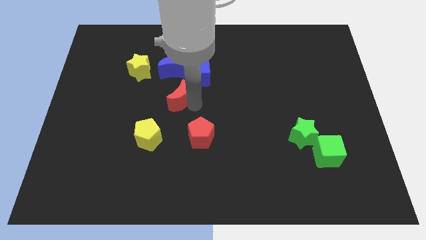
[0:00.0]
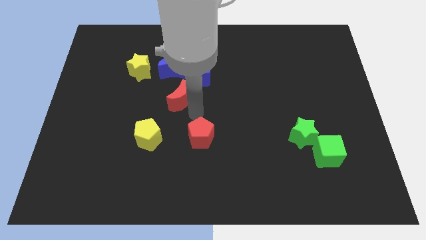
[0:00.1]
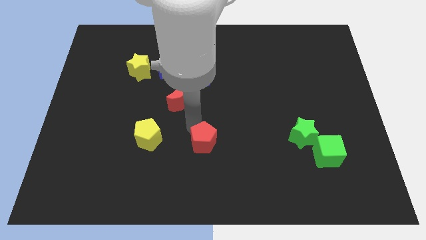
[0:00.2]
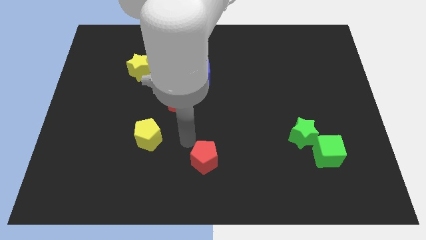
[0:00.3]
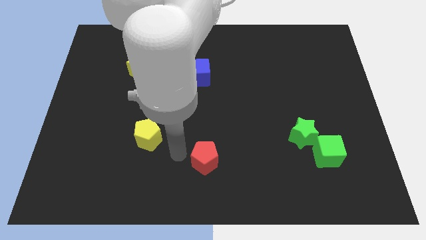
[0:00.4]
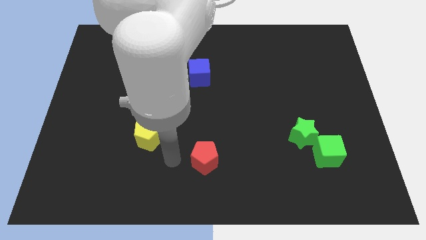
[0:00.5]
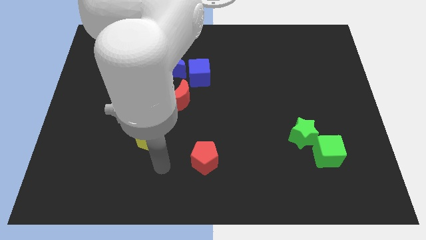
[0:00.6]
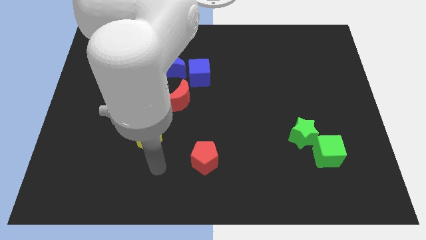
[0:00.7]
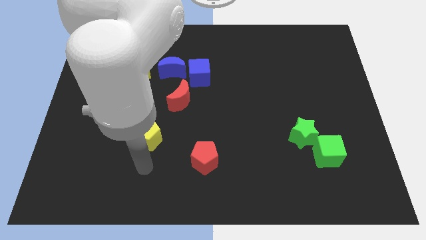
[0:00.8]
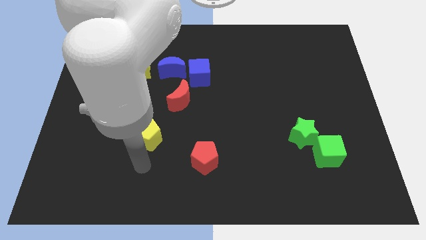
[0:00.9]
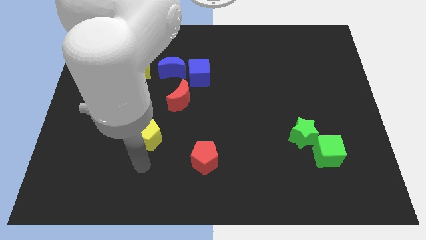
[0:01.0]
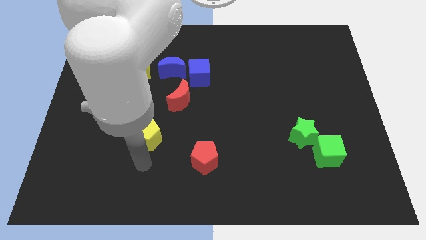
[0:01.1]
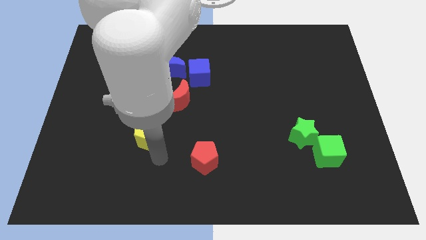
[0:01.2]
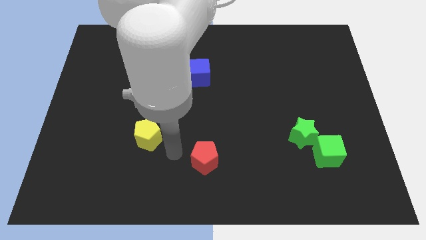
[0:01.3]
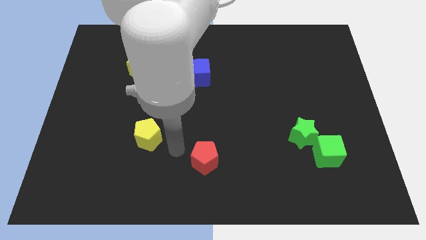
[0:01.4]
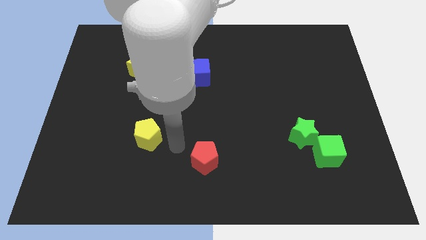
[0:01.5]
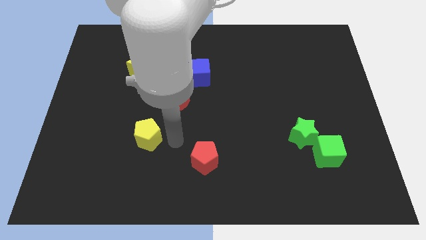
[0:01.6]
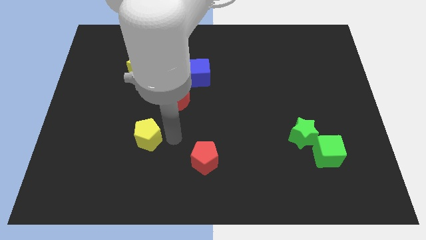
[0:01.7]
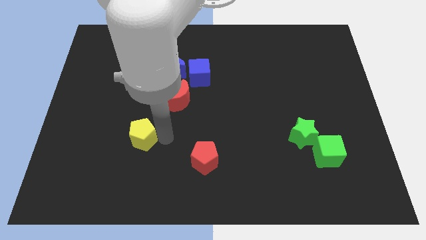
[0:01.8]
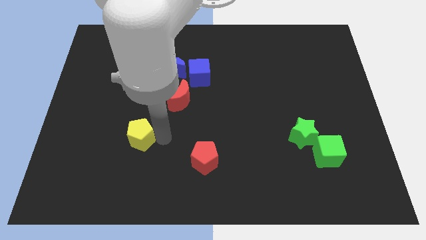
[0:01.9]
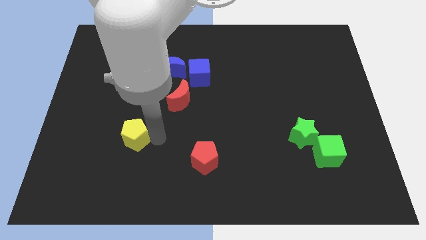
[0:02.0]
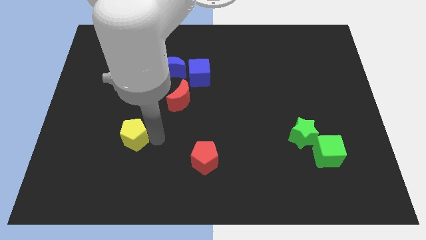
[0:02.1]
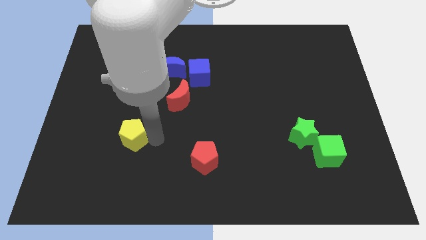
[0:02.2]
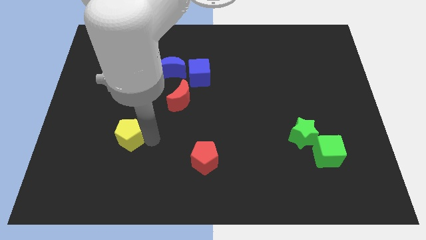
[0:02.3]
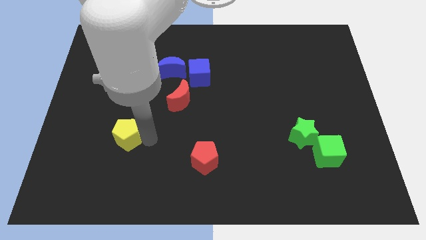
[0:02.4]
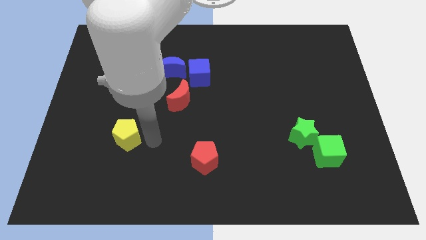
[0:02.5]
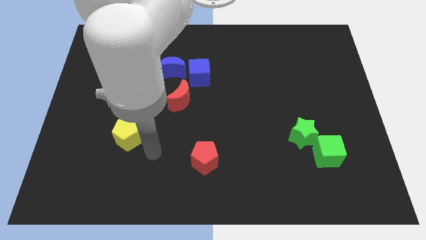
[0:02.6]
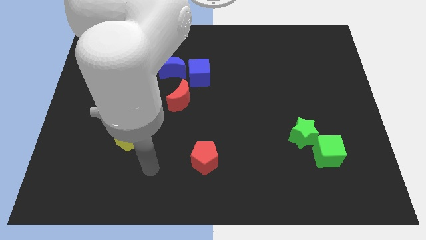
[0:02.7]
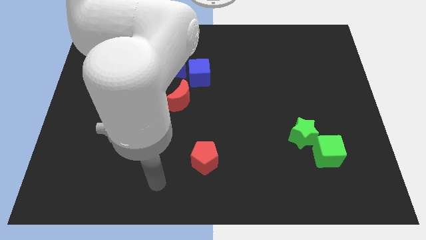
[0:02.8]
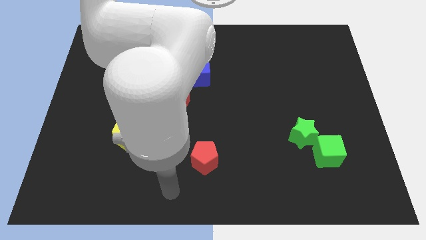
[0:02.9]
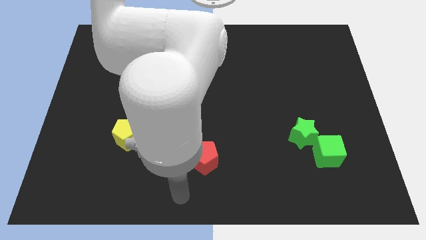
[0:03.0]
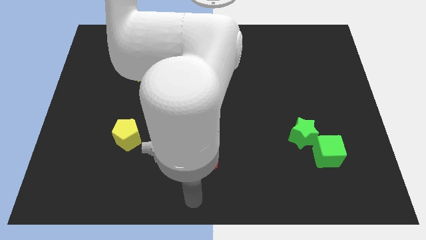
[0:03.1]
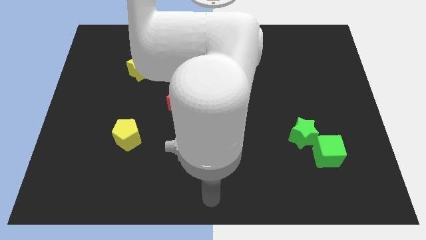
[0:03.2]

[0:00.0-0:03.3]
point your arm below red penntagon

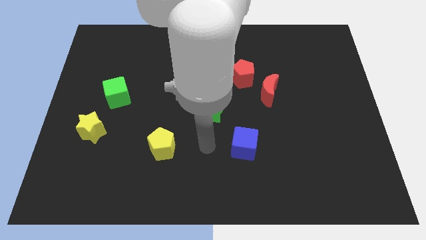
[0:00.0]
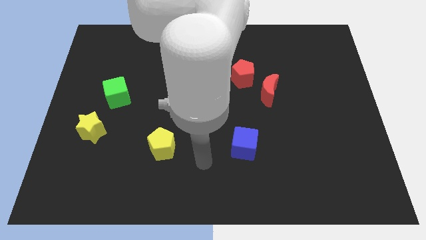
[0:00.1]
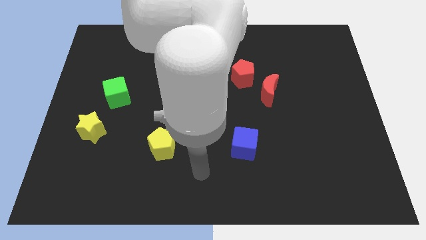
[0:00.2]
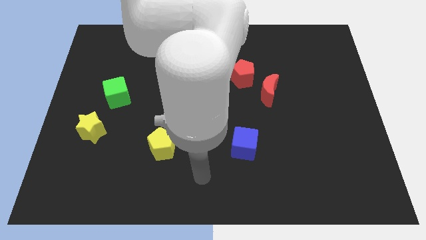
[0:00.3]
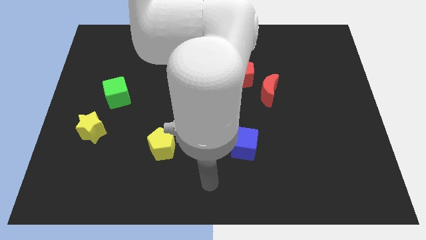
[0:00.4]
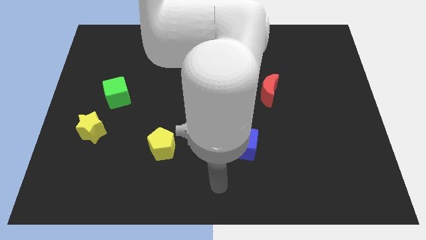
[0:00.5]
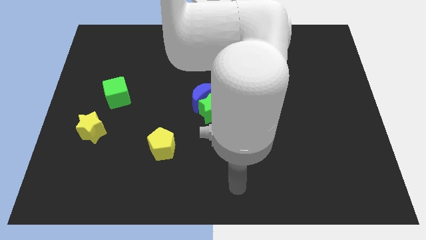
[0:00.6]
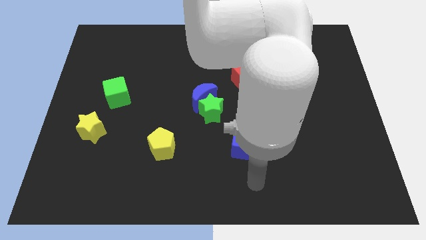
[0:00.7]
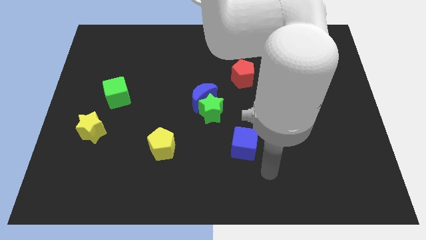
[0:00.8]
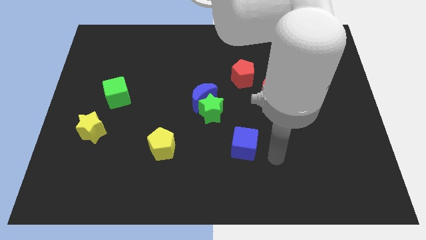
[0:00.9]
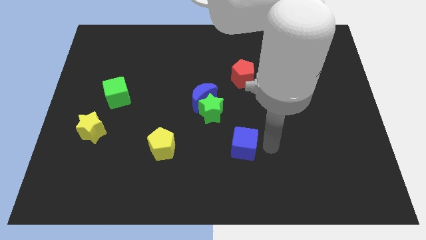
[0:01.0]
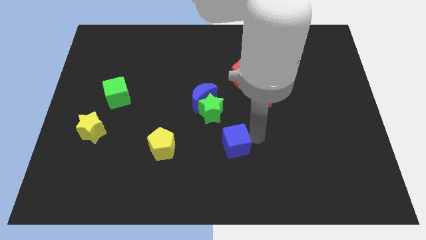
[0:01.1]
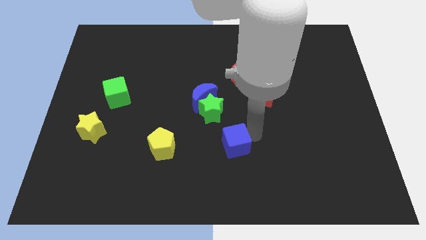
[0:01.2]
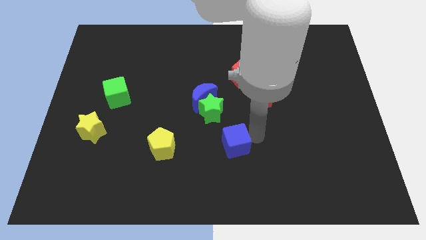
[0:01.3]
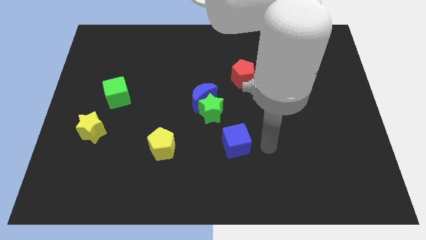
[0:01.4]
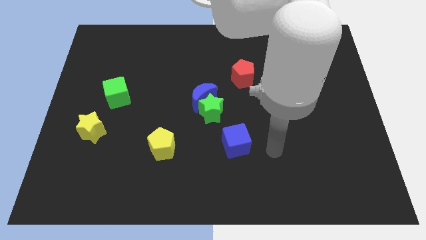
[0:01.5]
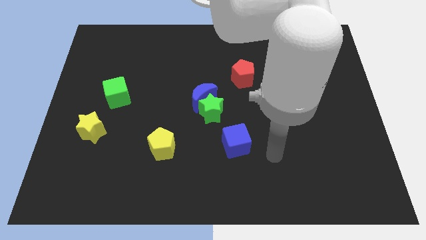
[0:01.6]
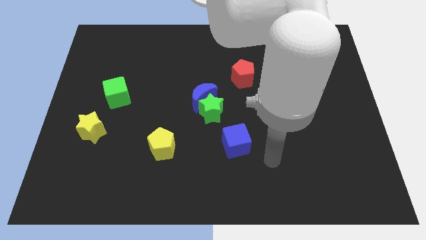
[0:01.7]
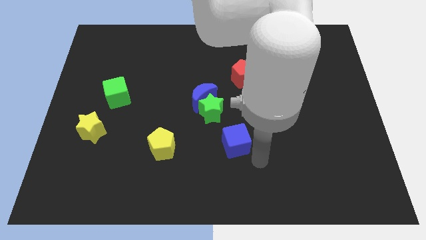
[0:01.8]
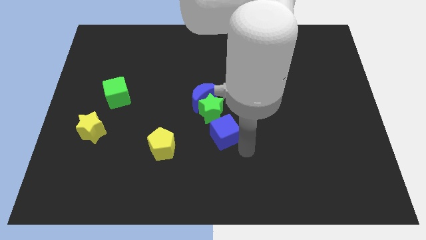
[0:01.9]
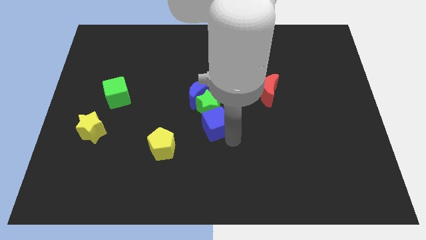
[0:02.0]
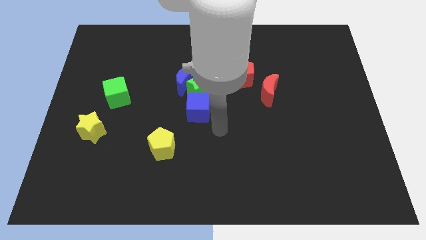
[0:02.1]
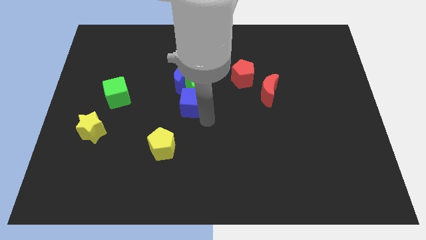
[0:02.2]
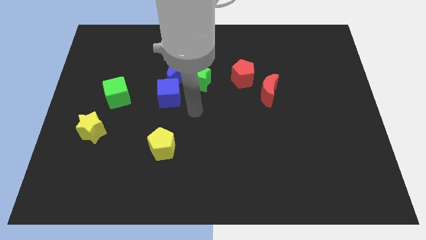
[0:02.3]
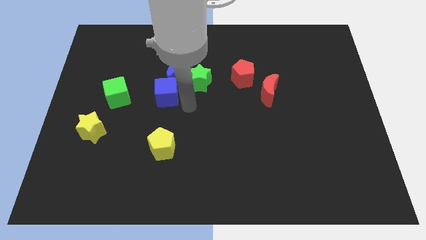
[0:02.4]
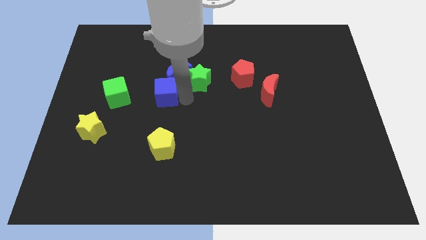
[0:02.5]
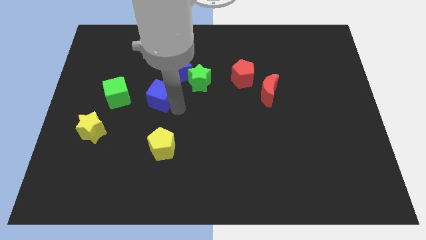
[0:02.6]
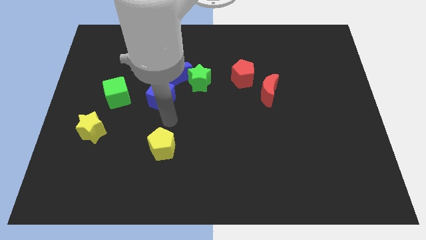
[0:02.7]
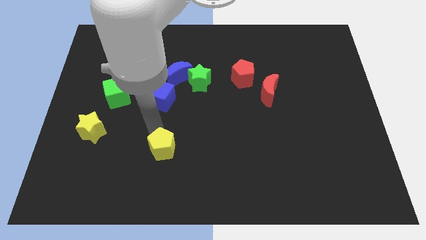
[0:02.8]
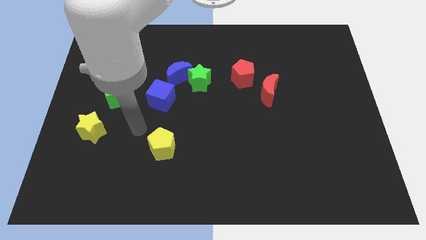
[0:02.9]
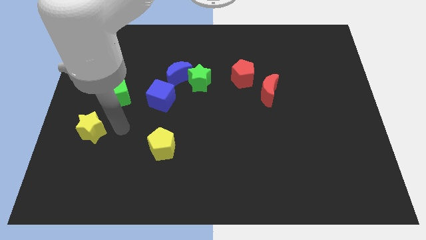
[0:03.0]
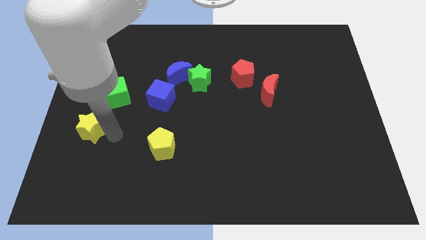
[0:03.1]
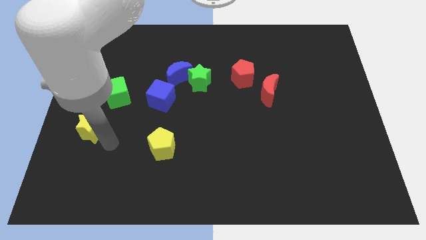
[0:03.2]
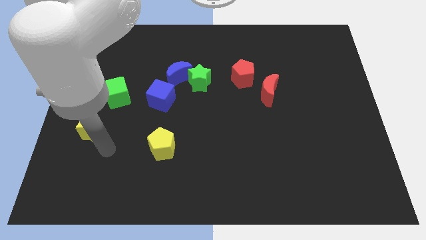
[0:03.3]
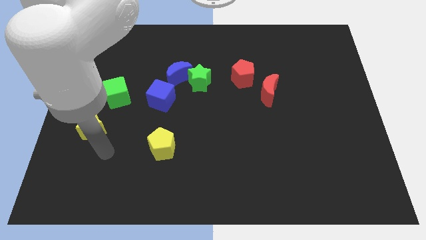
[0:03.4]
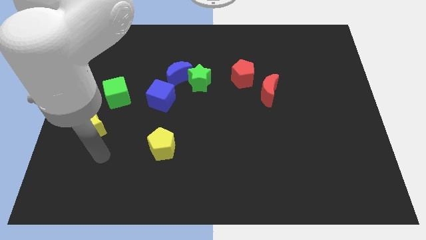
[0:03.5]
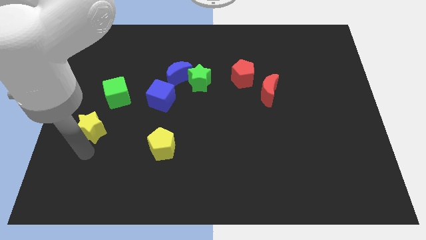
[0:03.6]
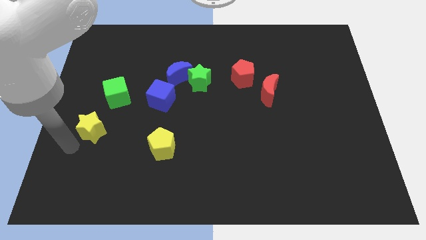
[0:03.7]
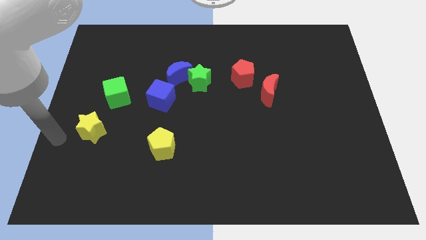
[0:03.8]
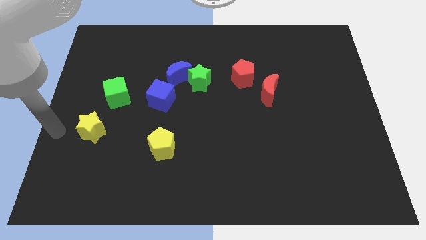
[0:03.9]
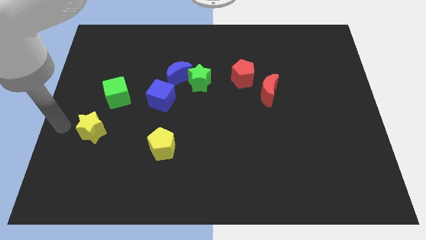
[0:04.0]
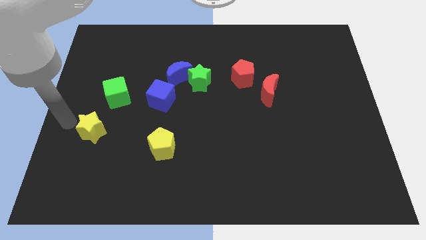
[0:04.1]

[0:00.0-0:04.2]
move the blue crescent green star and blue cube towards top

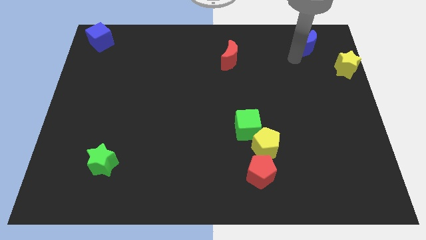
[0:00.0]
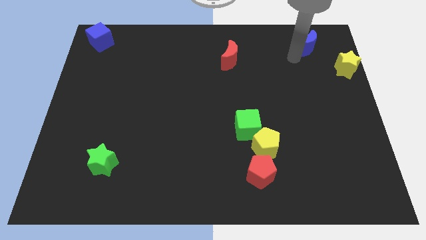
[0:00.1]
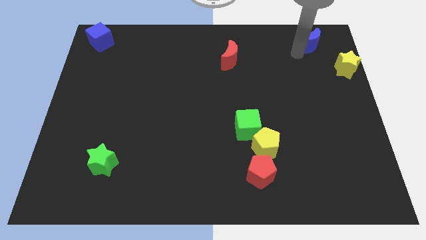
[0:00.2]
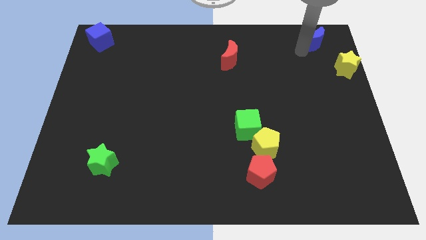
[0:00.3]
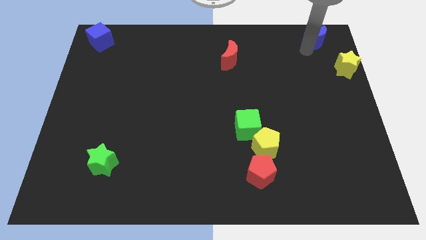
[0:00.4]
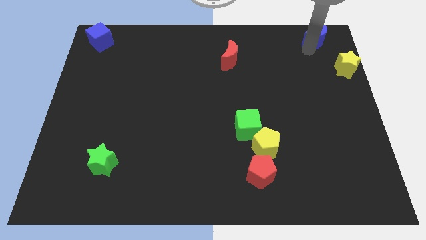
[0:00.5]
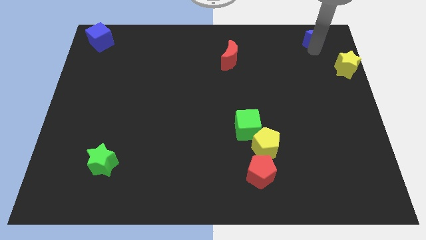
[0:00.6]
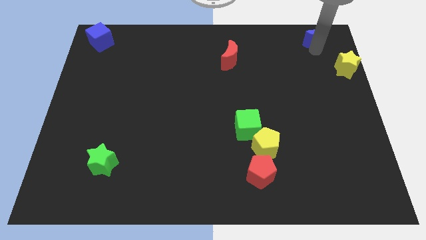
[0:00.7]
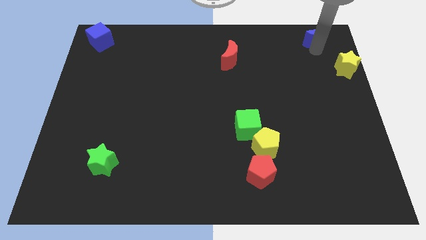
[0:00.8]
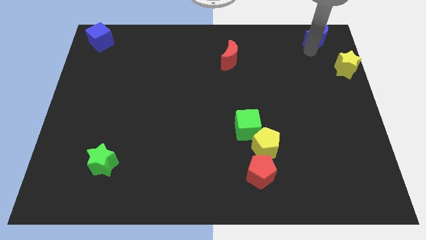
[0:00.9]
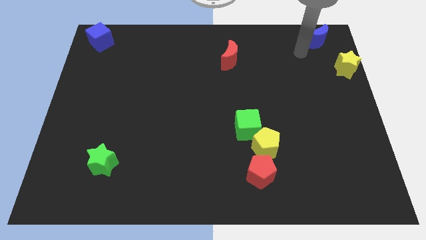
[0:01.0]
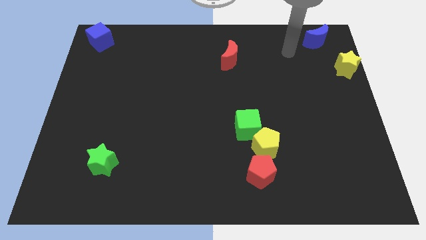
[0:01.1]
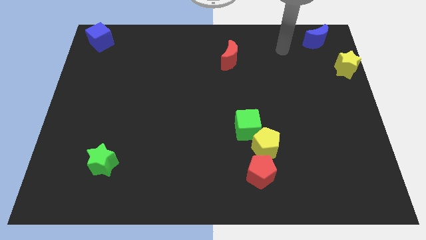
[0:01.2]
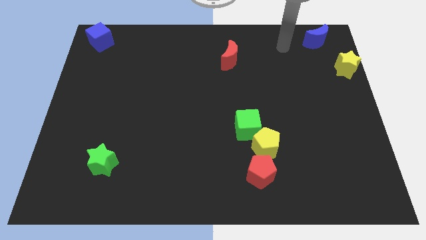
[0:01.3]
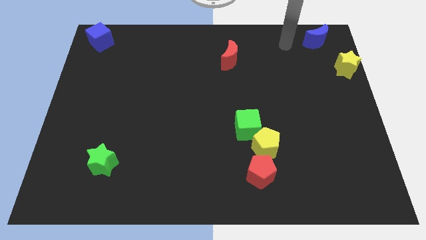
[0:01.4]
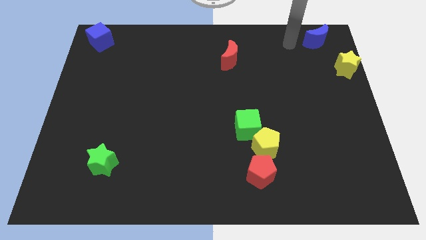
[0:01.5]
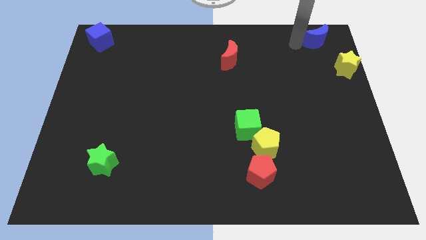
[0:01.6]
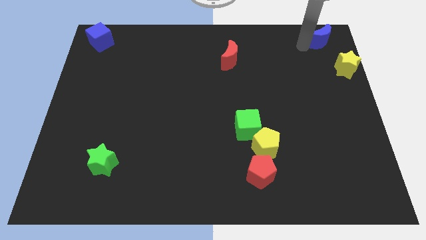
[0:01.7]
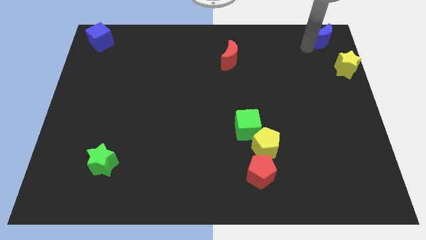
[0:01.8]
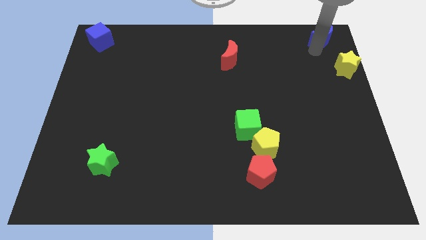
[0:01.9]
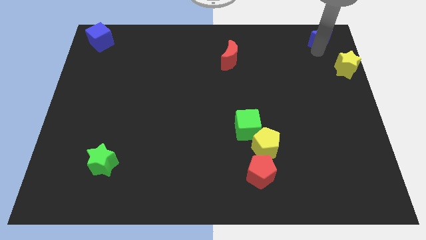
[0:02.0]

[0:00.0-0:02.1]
move blue moon towards top right
